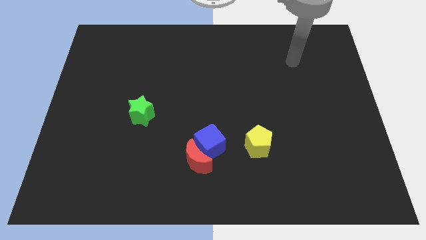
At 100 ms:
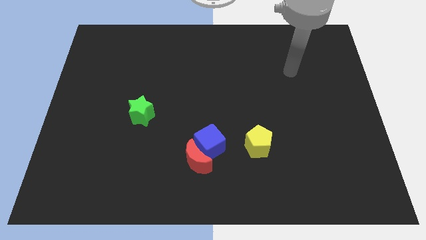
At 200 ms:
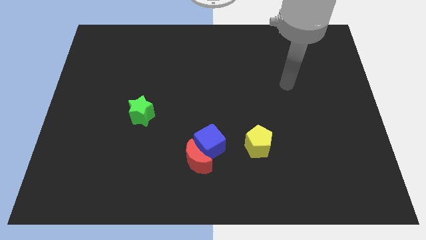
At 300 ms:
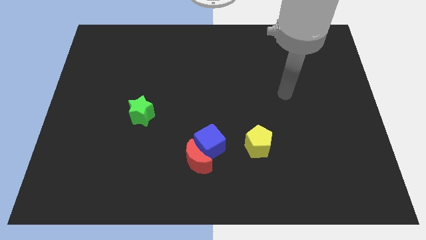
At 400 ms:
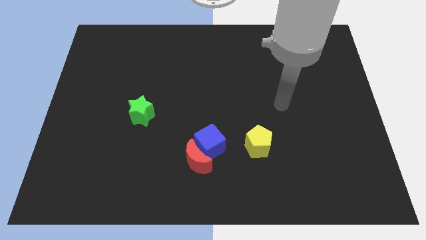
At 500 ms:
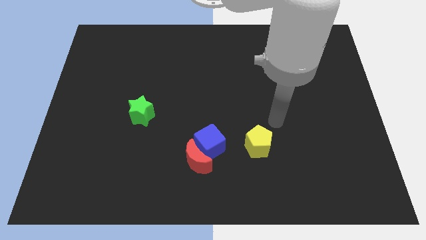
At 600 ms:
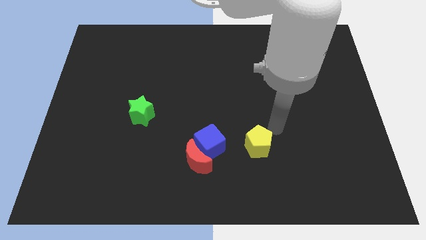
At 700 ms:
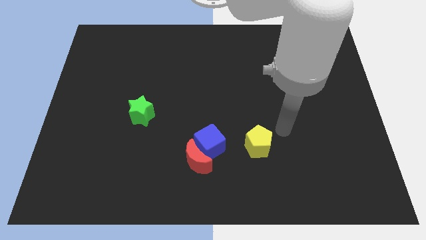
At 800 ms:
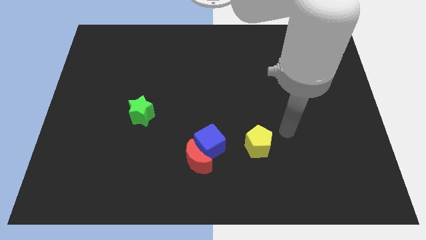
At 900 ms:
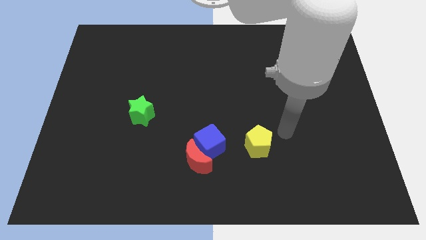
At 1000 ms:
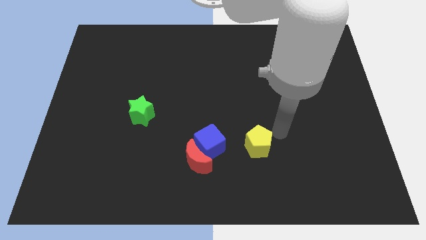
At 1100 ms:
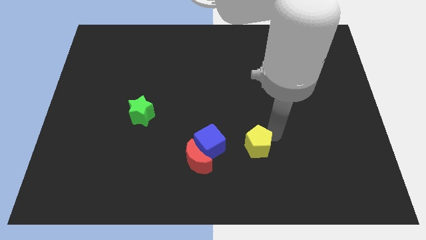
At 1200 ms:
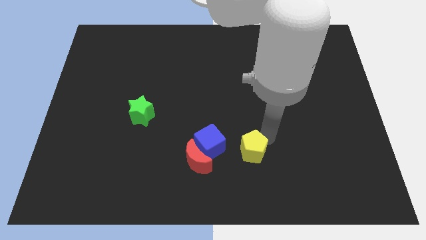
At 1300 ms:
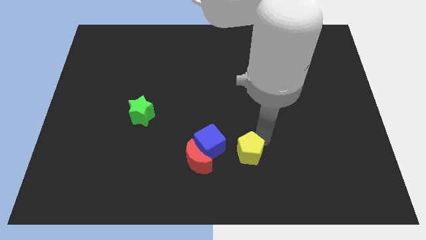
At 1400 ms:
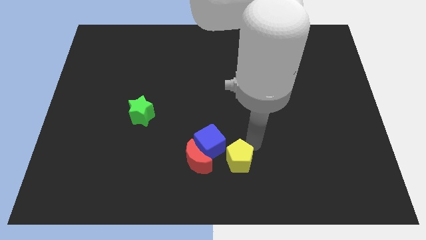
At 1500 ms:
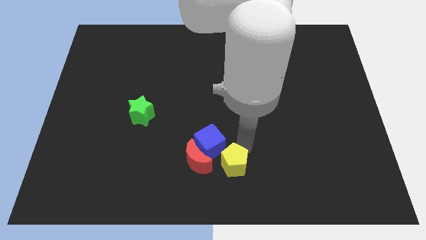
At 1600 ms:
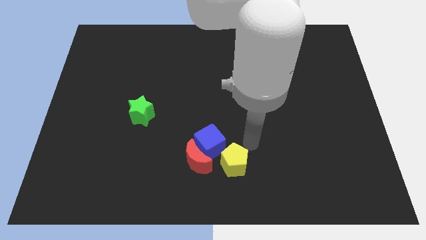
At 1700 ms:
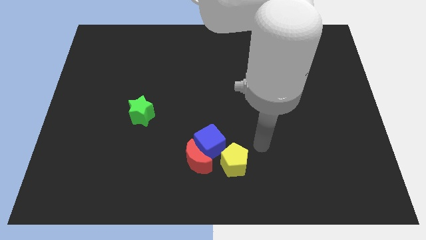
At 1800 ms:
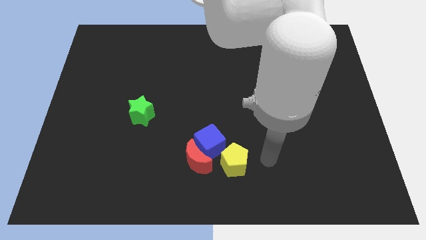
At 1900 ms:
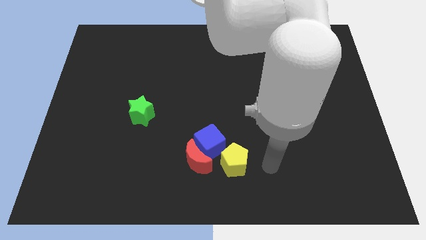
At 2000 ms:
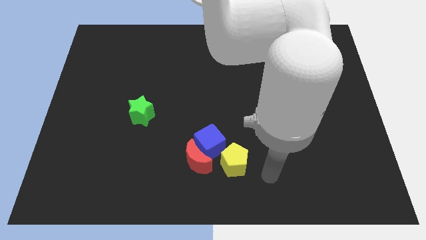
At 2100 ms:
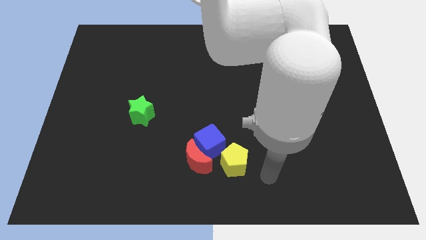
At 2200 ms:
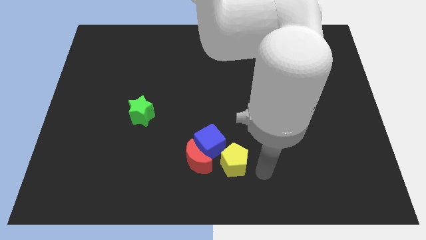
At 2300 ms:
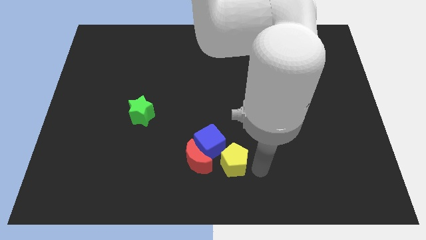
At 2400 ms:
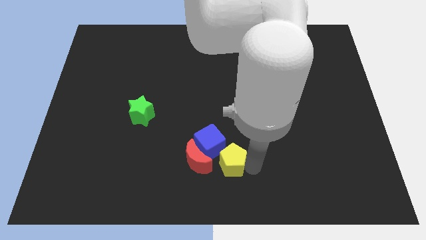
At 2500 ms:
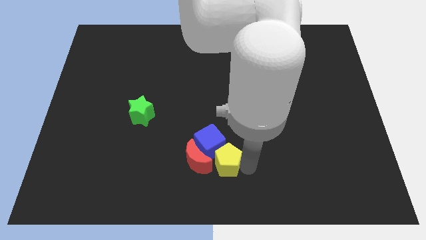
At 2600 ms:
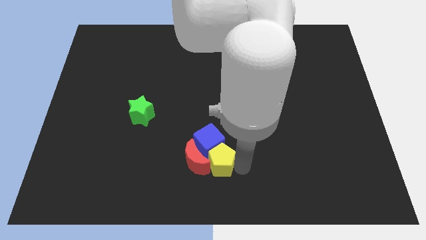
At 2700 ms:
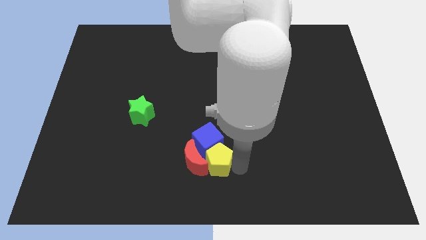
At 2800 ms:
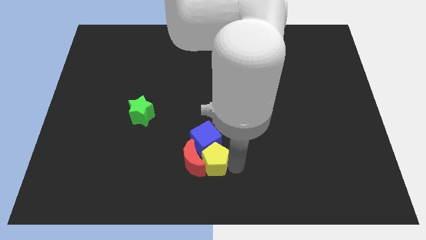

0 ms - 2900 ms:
put the yellow pentagon to the red block

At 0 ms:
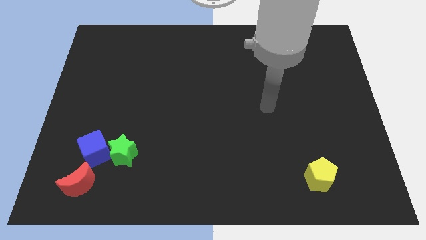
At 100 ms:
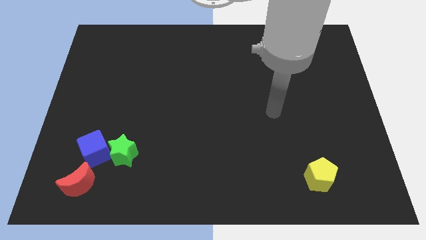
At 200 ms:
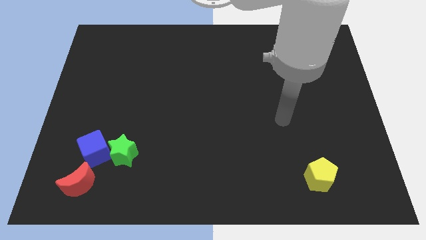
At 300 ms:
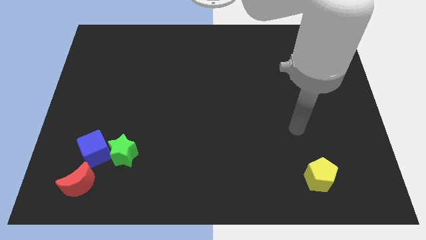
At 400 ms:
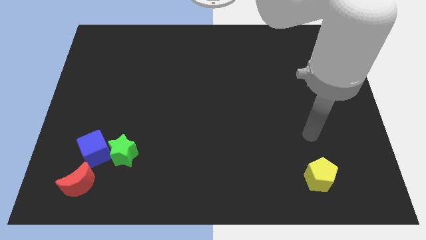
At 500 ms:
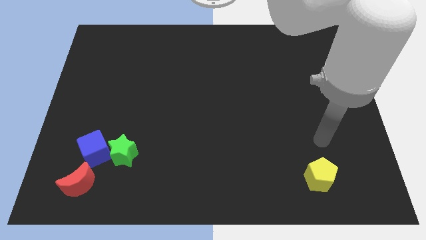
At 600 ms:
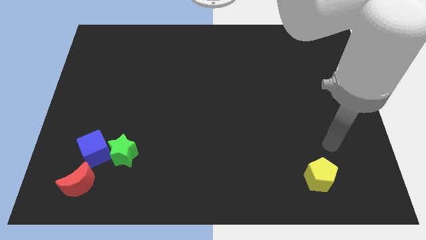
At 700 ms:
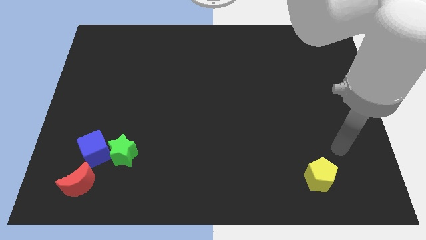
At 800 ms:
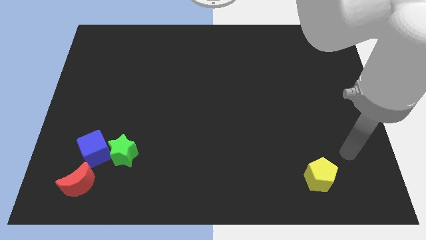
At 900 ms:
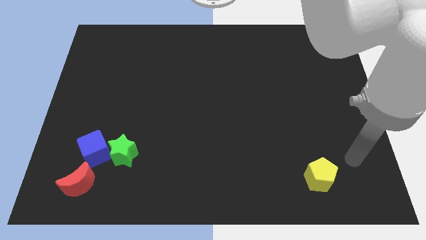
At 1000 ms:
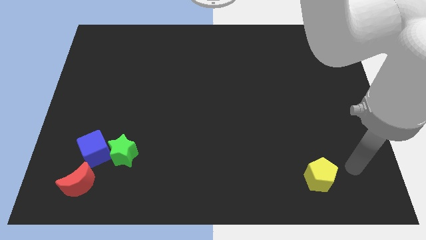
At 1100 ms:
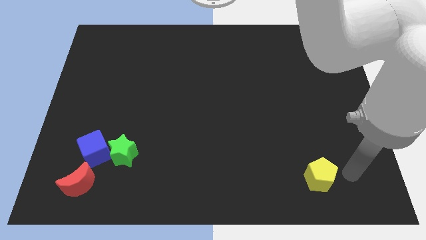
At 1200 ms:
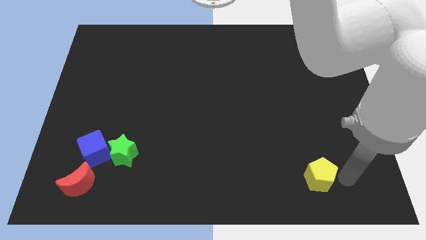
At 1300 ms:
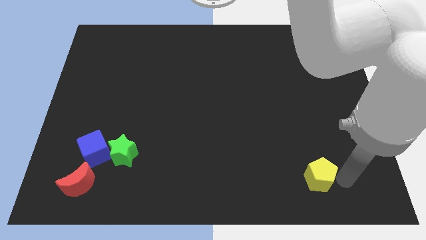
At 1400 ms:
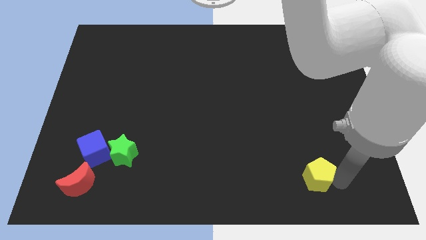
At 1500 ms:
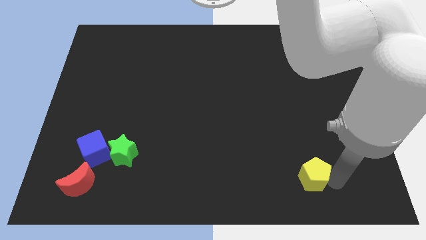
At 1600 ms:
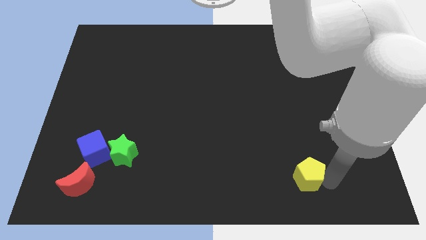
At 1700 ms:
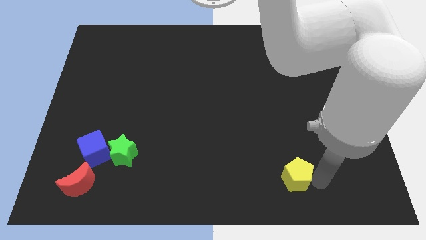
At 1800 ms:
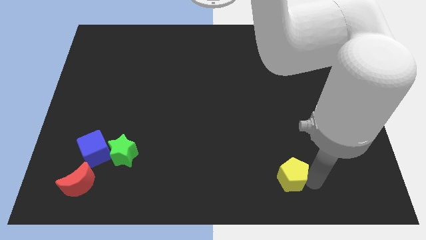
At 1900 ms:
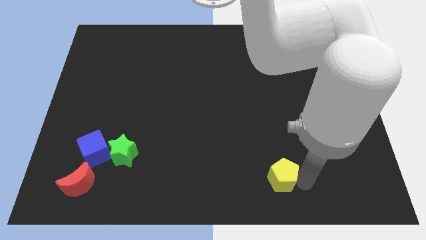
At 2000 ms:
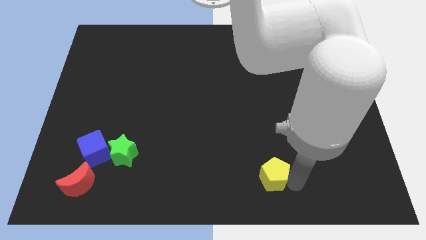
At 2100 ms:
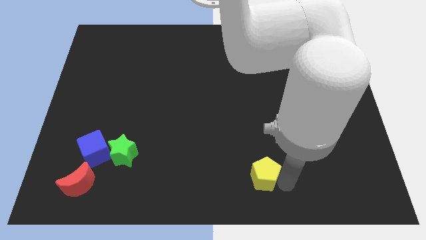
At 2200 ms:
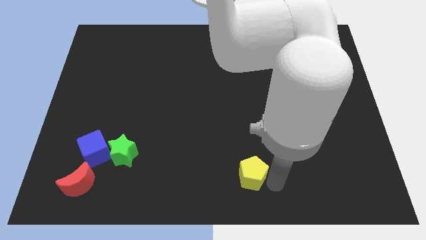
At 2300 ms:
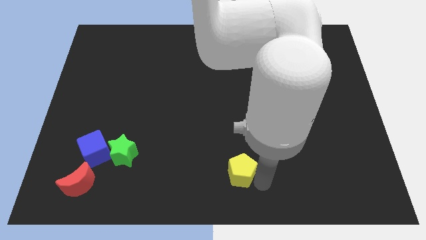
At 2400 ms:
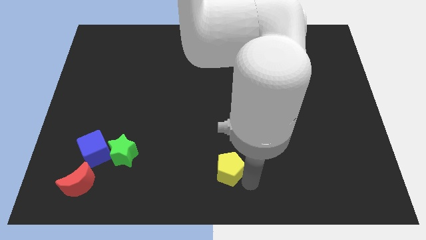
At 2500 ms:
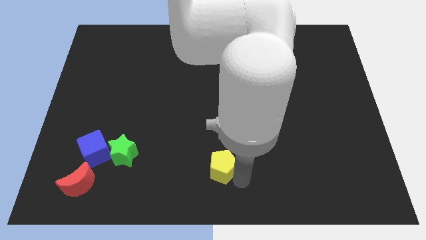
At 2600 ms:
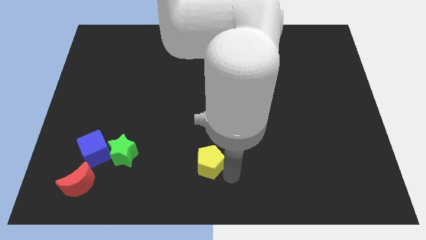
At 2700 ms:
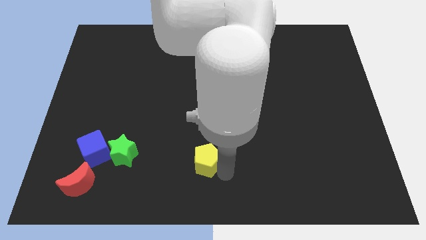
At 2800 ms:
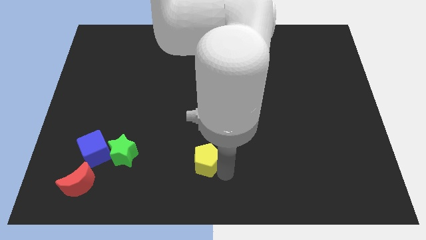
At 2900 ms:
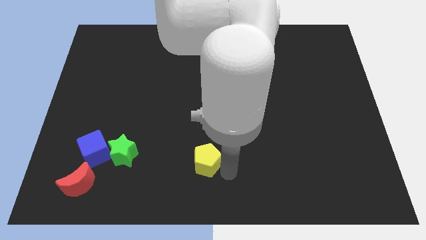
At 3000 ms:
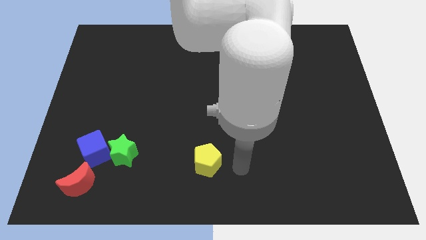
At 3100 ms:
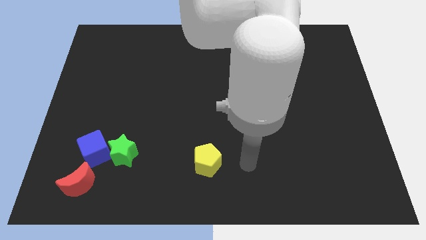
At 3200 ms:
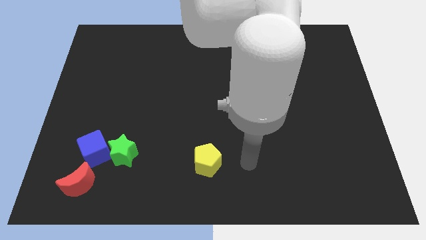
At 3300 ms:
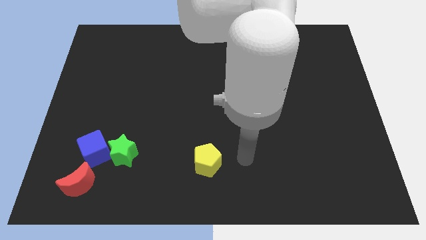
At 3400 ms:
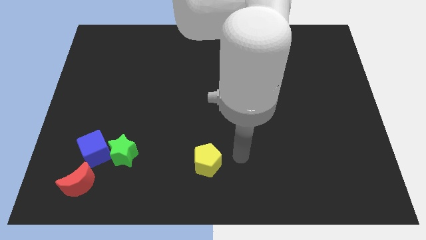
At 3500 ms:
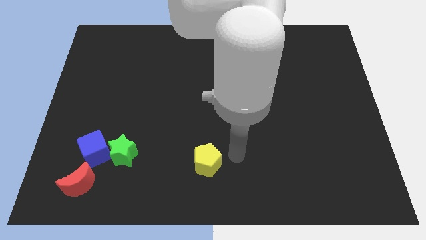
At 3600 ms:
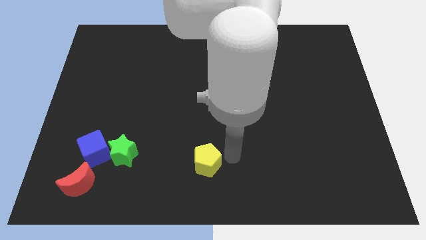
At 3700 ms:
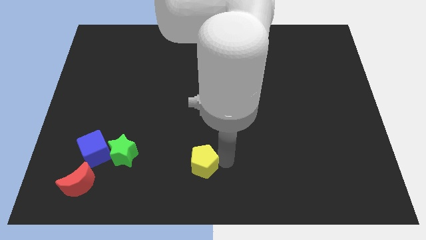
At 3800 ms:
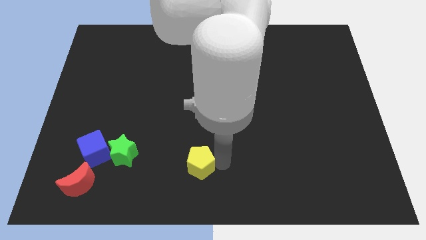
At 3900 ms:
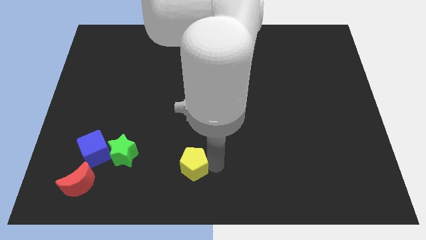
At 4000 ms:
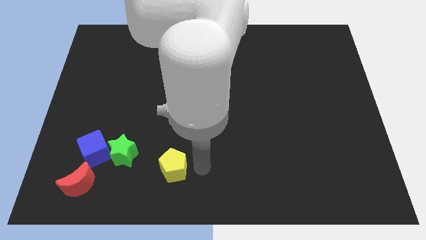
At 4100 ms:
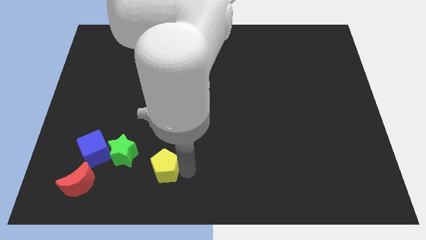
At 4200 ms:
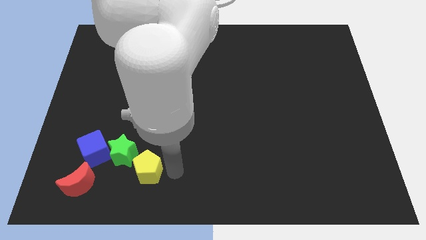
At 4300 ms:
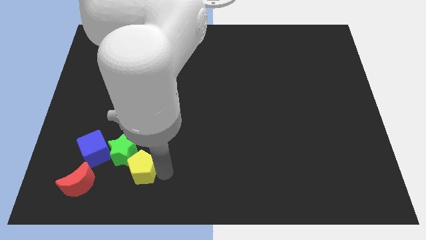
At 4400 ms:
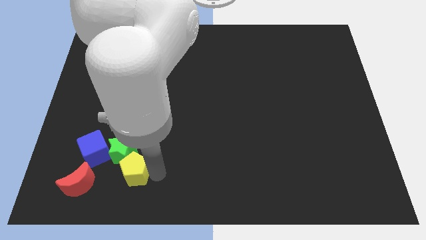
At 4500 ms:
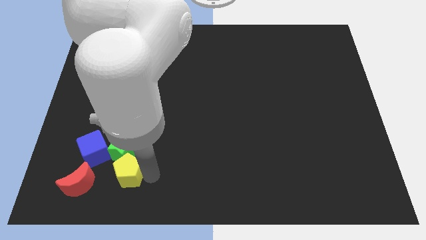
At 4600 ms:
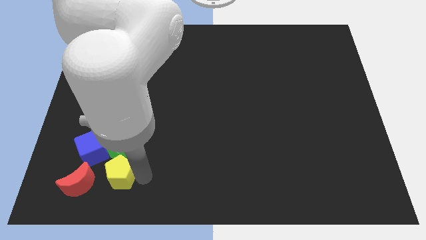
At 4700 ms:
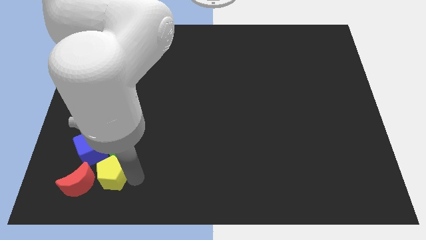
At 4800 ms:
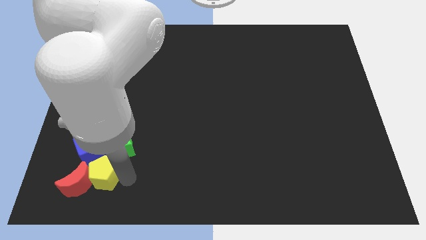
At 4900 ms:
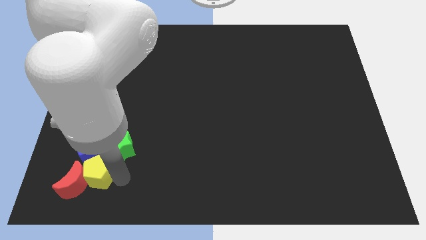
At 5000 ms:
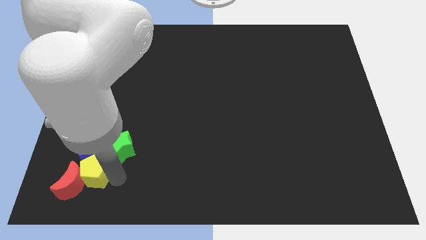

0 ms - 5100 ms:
put the yellow pentagon close to the red moon

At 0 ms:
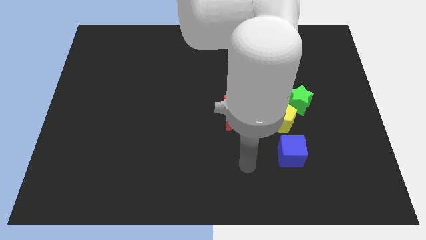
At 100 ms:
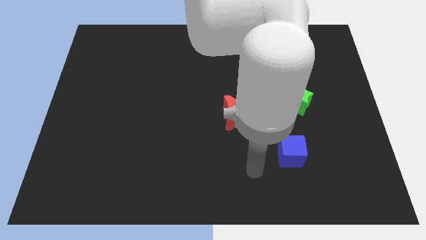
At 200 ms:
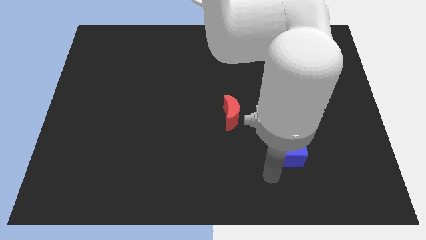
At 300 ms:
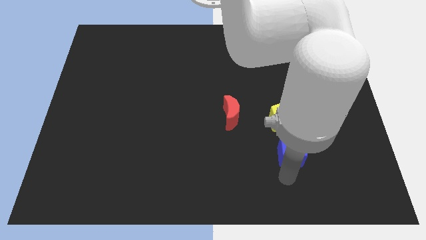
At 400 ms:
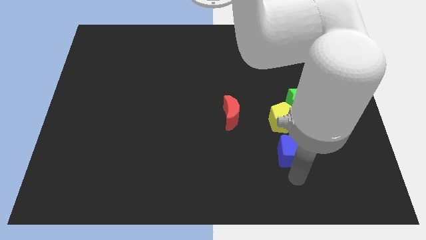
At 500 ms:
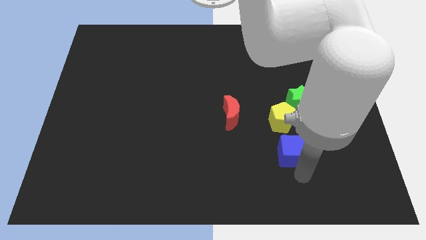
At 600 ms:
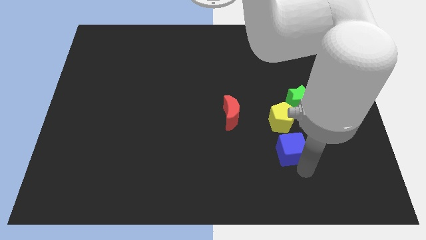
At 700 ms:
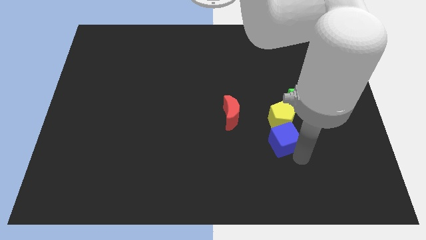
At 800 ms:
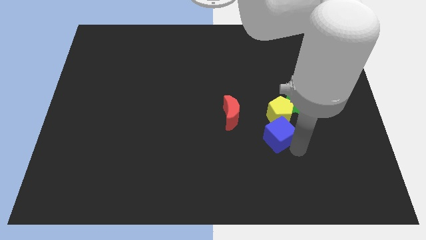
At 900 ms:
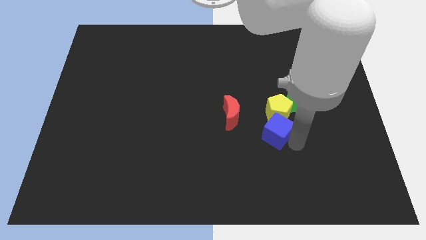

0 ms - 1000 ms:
put the cube towards the yellow block
